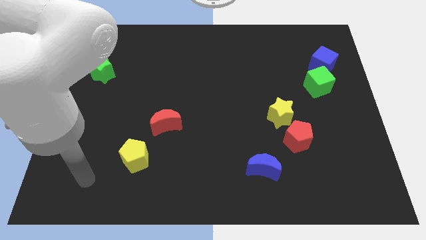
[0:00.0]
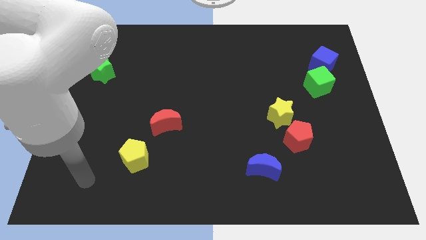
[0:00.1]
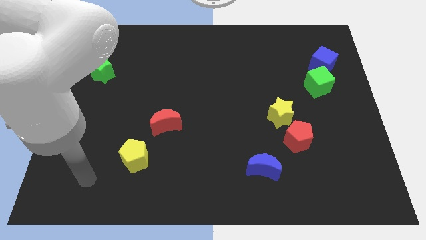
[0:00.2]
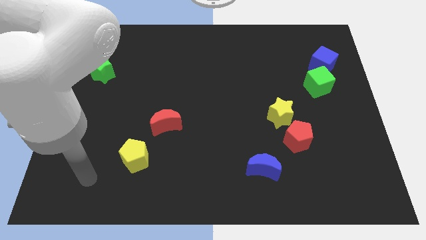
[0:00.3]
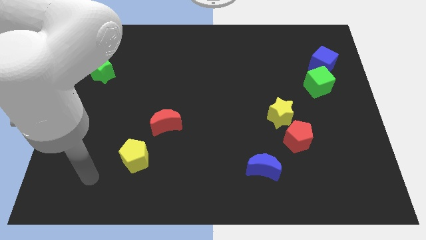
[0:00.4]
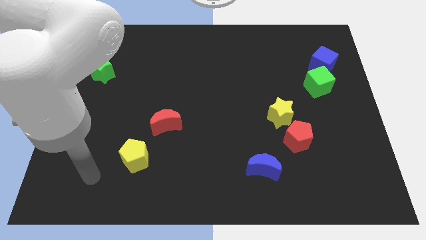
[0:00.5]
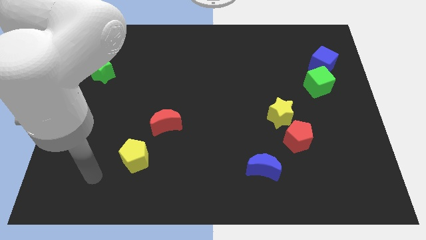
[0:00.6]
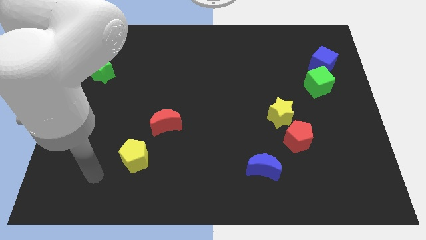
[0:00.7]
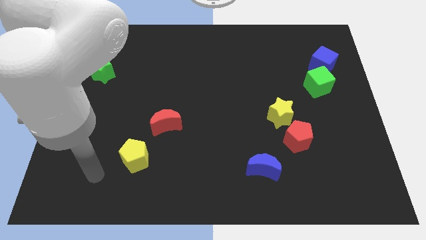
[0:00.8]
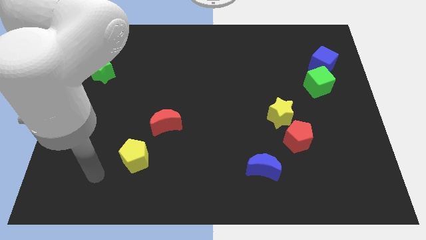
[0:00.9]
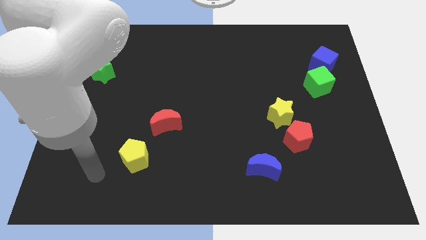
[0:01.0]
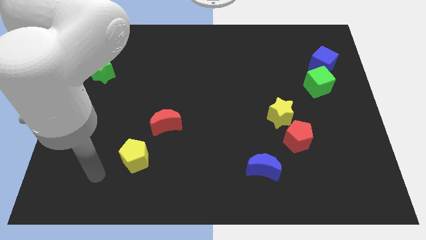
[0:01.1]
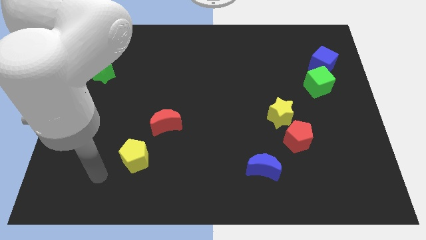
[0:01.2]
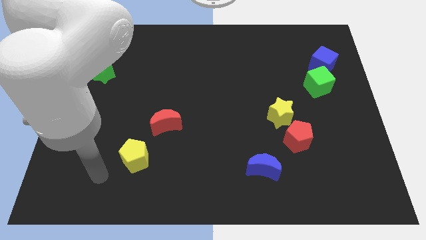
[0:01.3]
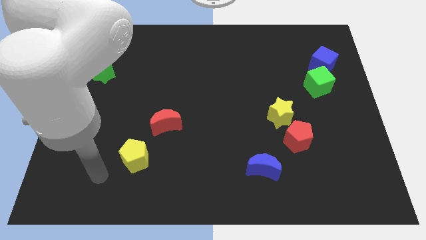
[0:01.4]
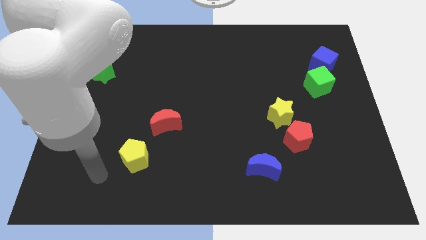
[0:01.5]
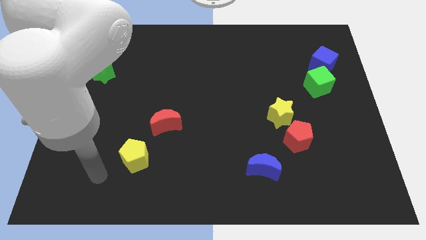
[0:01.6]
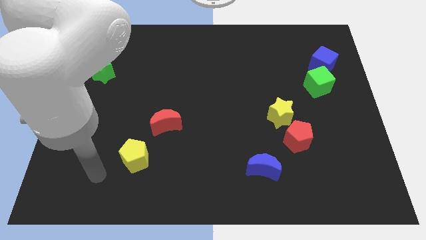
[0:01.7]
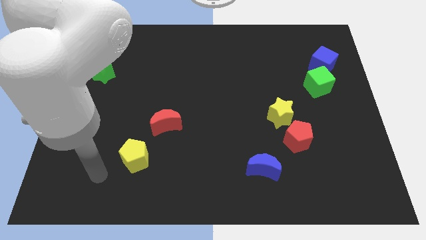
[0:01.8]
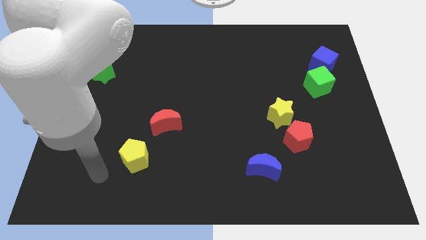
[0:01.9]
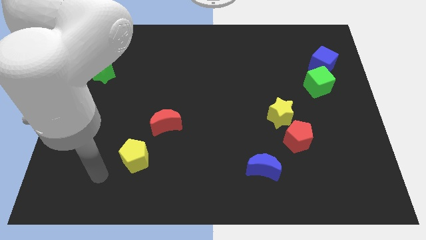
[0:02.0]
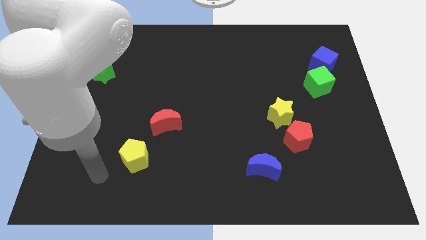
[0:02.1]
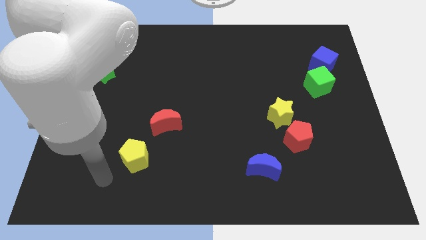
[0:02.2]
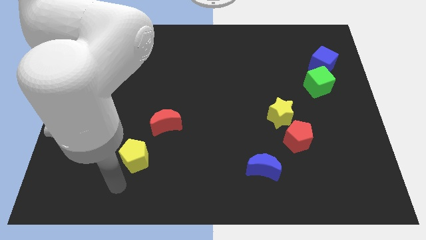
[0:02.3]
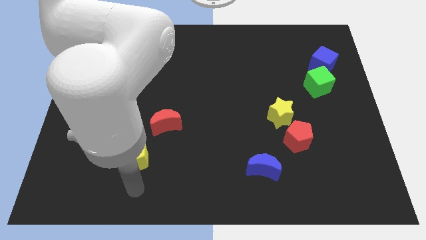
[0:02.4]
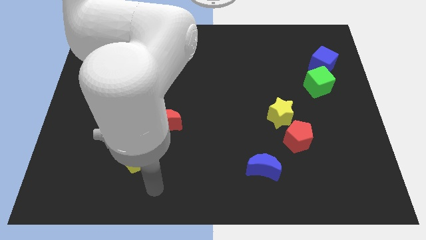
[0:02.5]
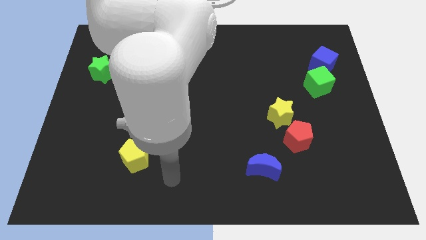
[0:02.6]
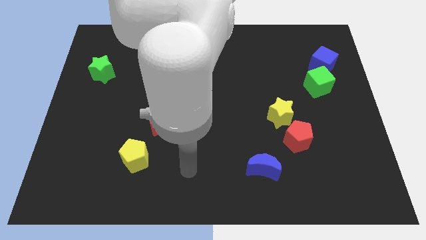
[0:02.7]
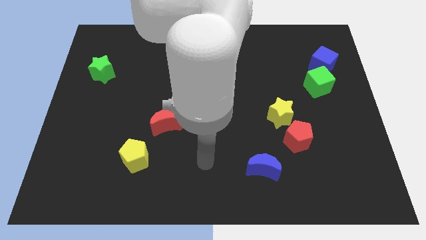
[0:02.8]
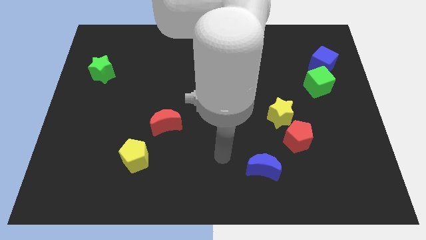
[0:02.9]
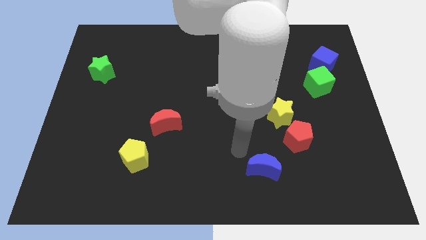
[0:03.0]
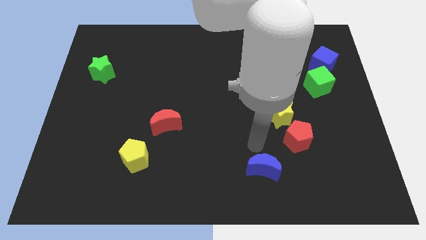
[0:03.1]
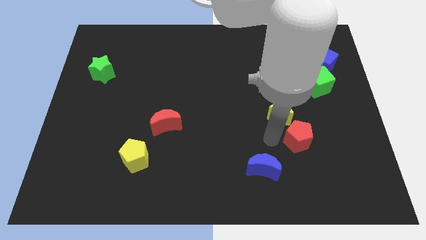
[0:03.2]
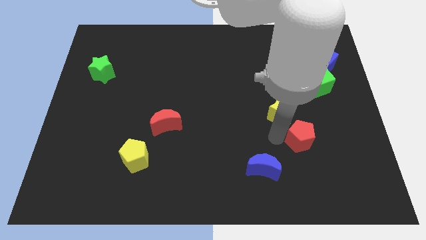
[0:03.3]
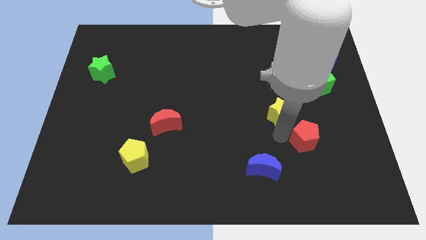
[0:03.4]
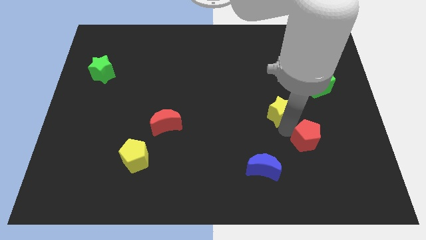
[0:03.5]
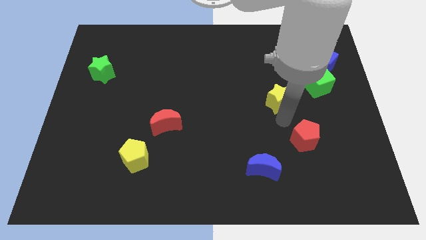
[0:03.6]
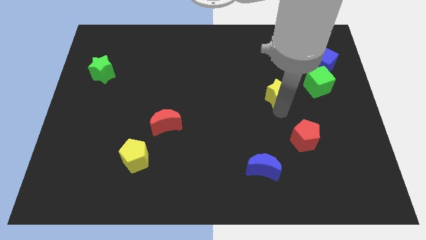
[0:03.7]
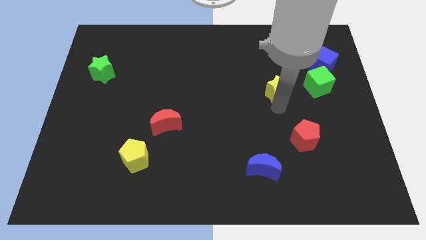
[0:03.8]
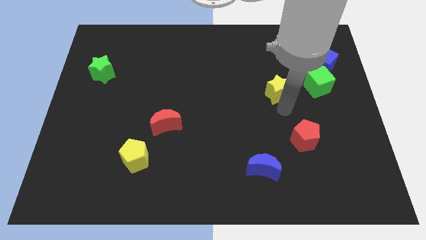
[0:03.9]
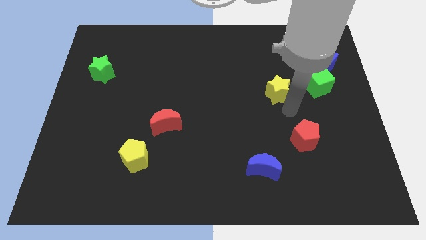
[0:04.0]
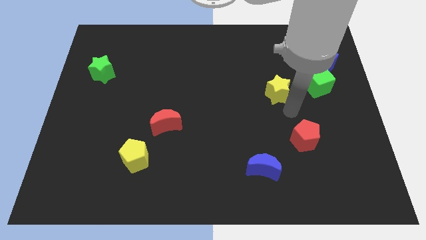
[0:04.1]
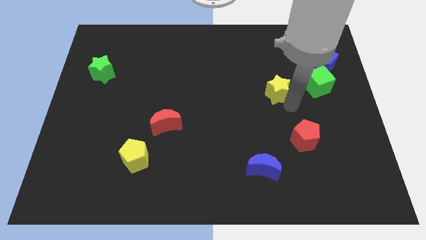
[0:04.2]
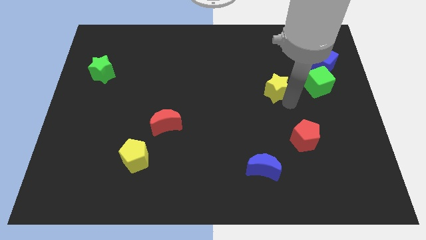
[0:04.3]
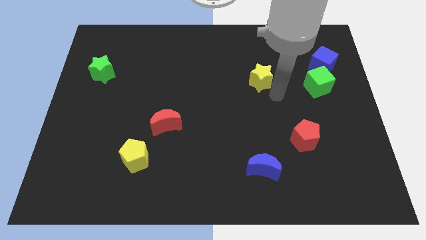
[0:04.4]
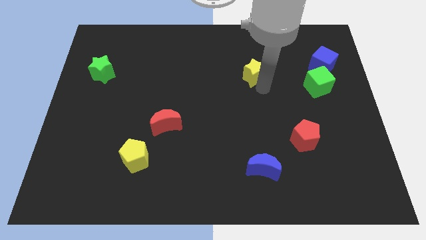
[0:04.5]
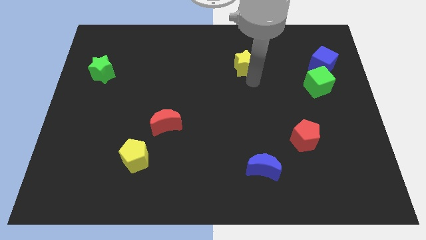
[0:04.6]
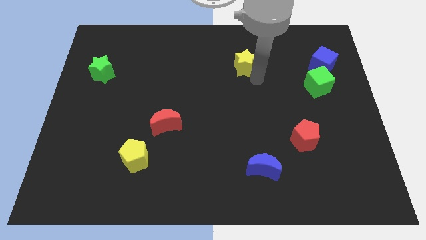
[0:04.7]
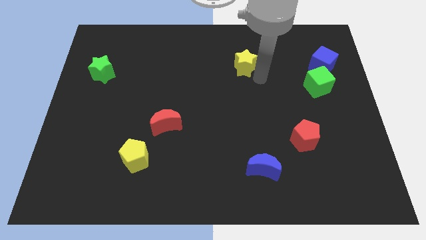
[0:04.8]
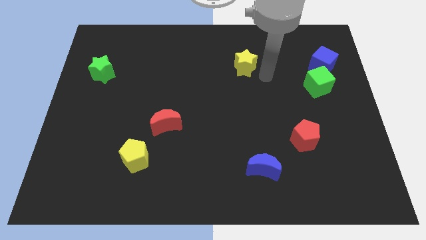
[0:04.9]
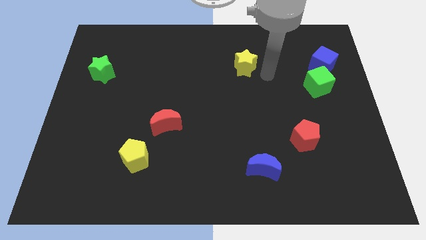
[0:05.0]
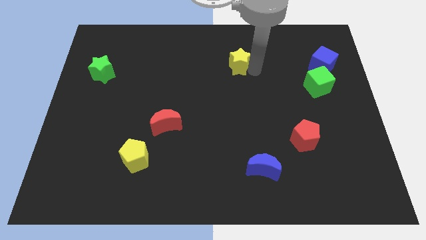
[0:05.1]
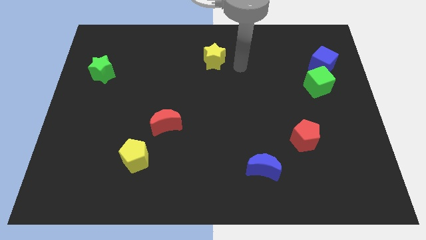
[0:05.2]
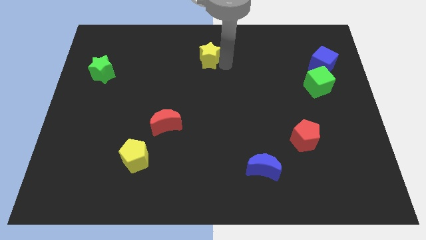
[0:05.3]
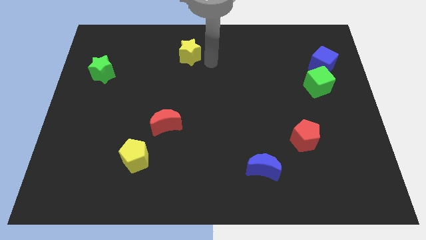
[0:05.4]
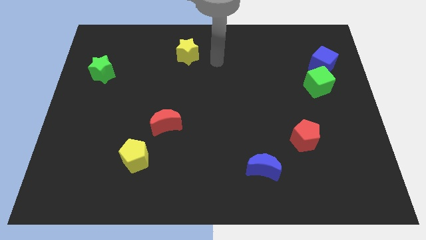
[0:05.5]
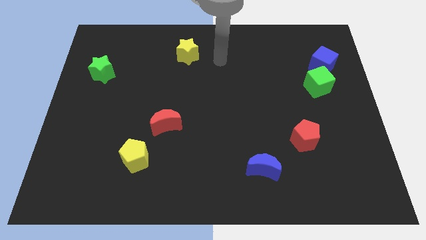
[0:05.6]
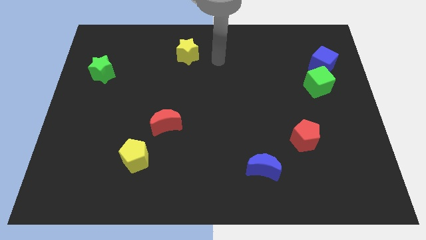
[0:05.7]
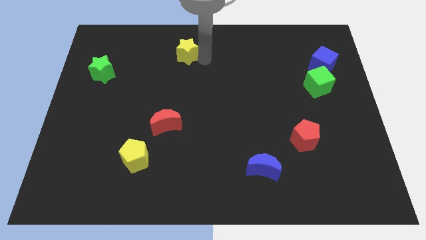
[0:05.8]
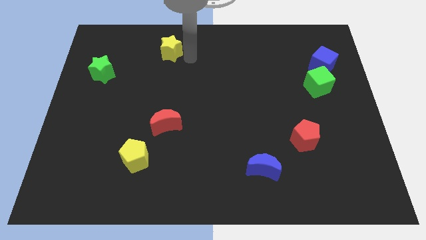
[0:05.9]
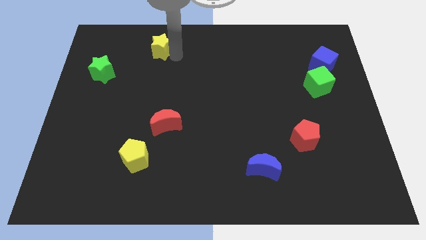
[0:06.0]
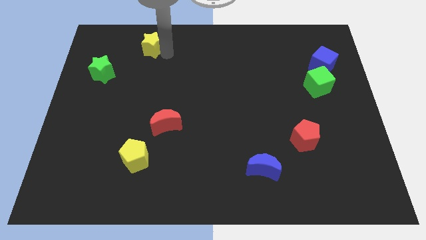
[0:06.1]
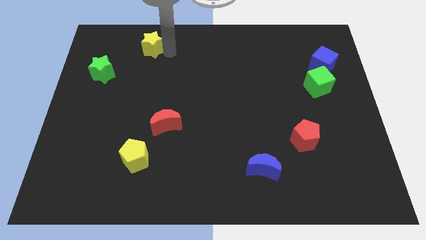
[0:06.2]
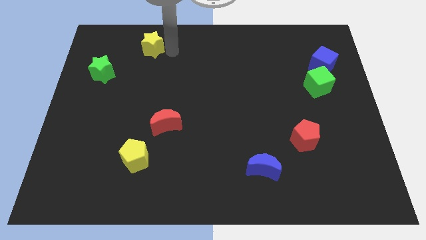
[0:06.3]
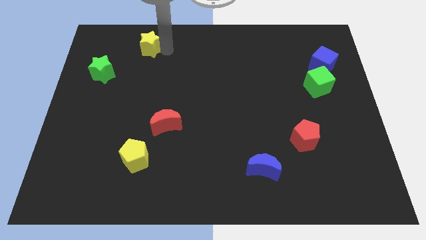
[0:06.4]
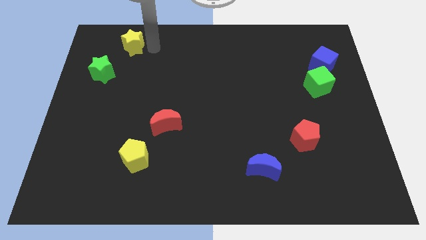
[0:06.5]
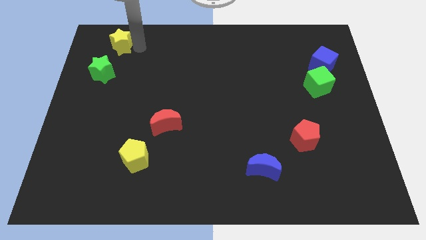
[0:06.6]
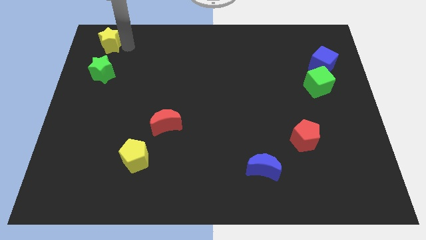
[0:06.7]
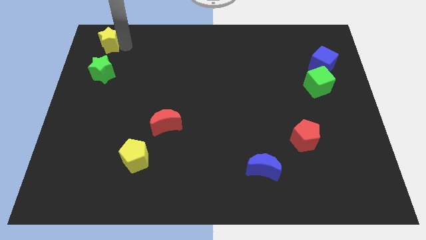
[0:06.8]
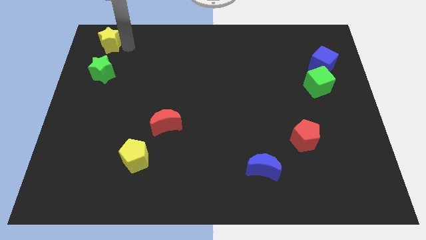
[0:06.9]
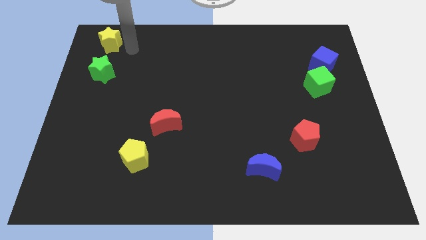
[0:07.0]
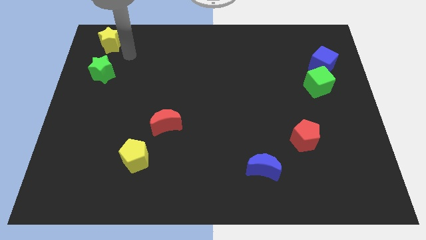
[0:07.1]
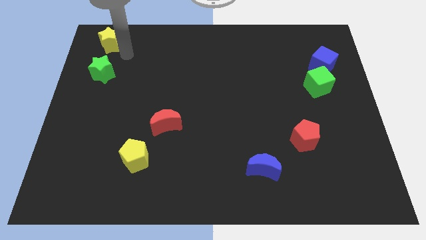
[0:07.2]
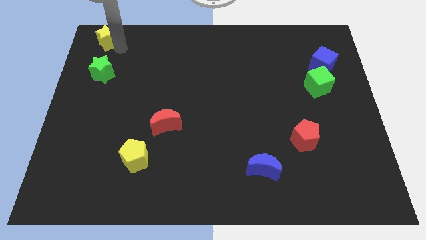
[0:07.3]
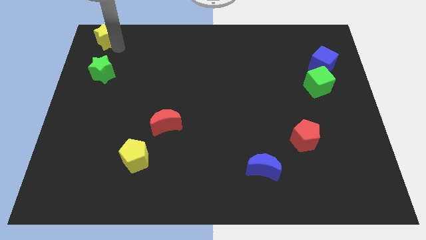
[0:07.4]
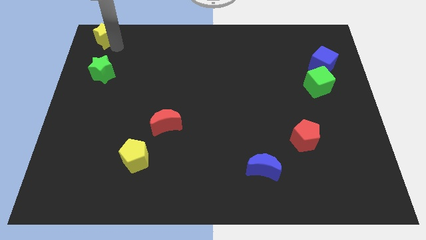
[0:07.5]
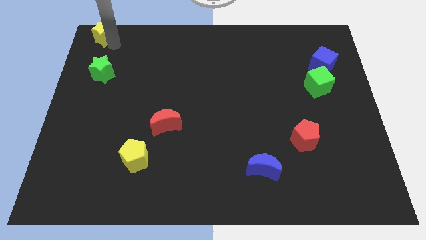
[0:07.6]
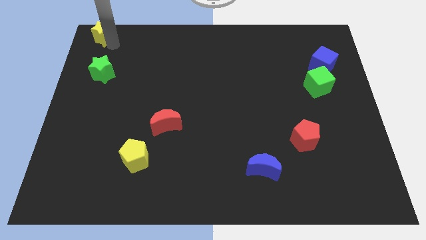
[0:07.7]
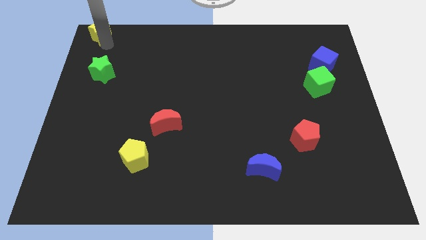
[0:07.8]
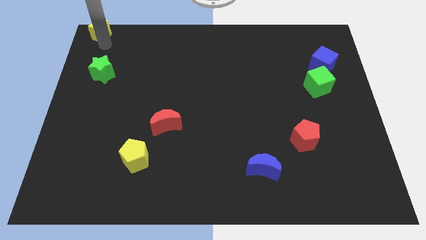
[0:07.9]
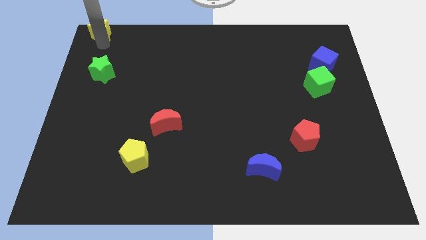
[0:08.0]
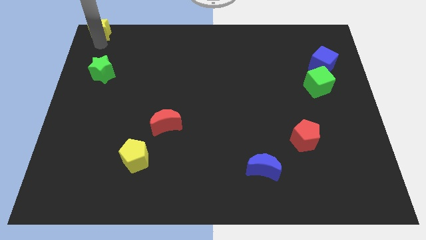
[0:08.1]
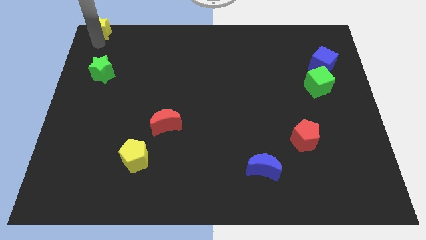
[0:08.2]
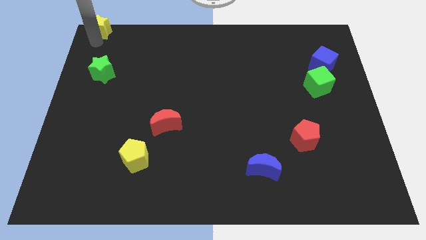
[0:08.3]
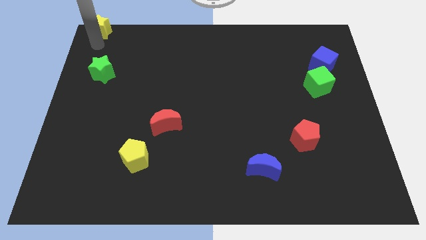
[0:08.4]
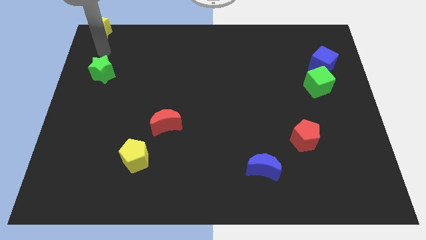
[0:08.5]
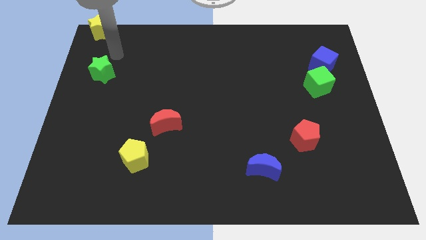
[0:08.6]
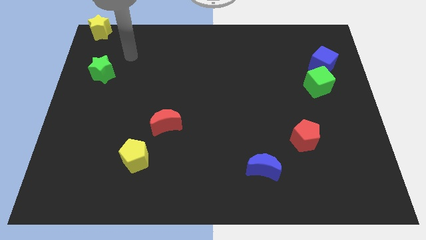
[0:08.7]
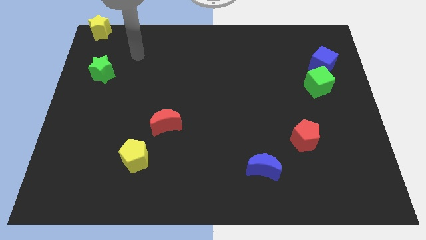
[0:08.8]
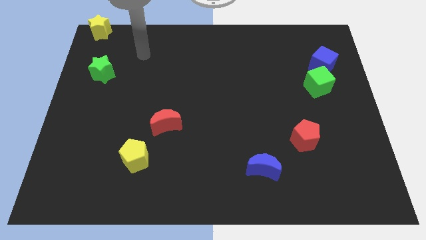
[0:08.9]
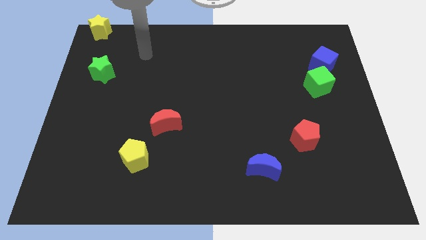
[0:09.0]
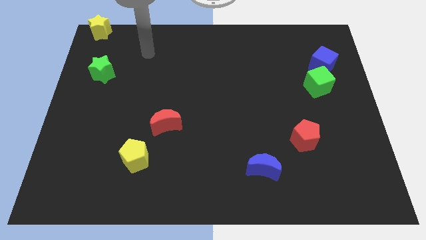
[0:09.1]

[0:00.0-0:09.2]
place the yellow star towards the top left corner of the board
